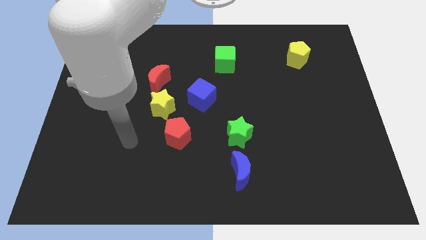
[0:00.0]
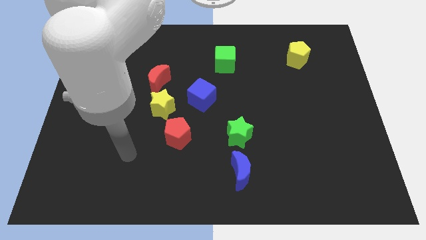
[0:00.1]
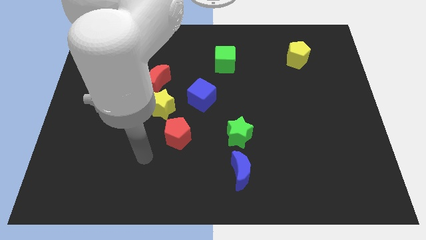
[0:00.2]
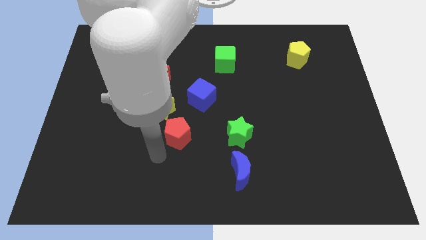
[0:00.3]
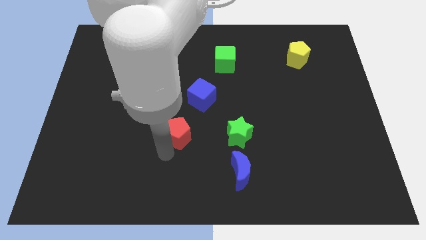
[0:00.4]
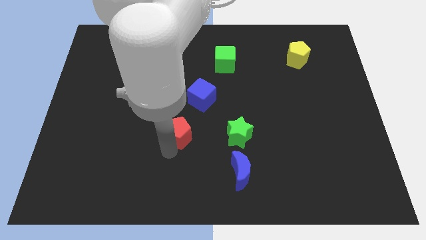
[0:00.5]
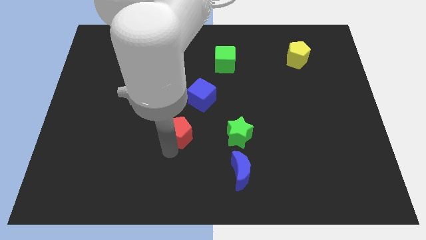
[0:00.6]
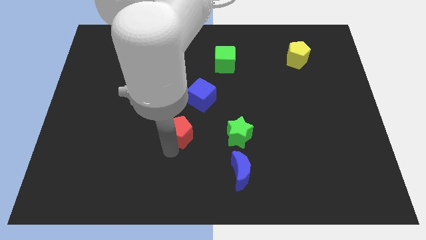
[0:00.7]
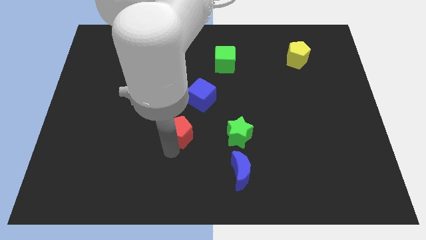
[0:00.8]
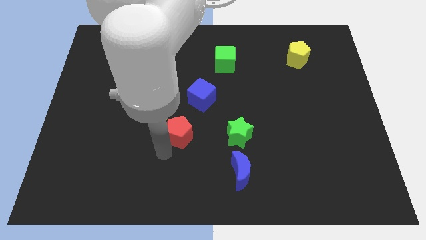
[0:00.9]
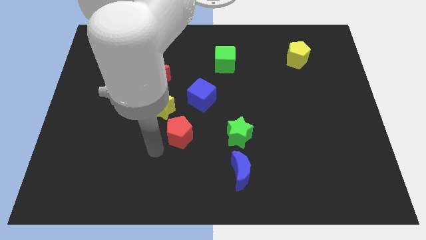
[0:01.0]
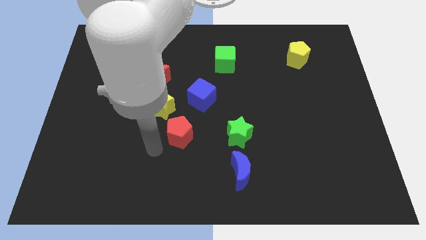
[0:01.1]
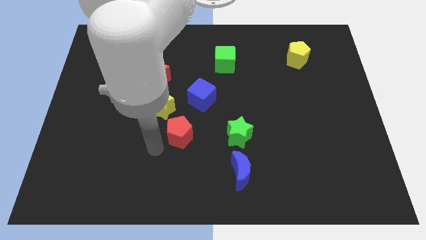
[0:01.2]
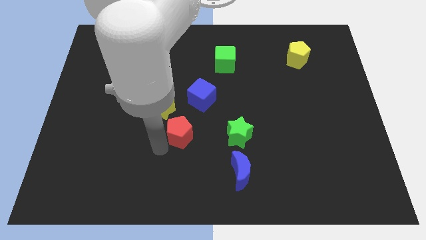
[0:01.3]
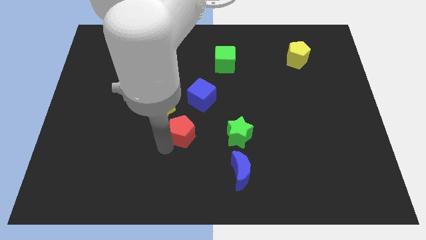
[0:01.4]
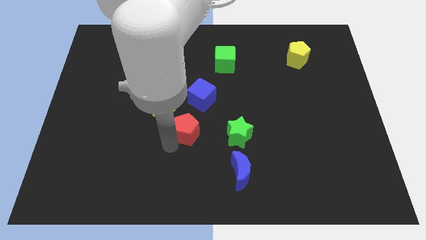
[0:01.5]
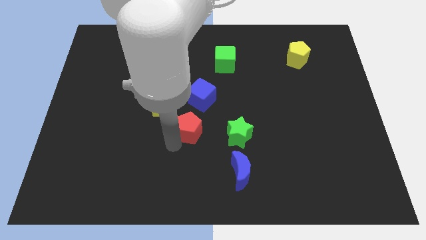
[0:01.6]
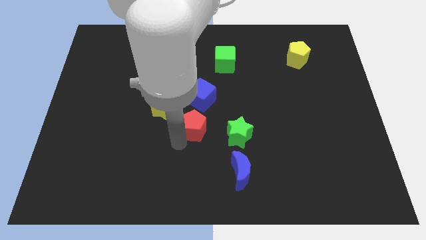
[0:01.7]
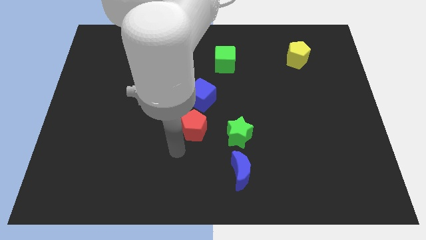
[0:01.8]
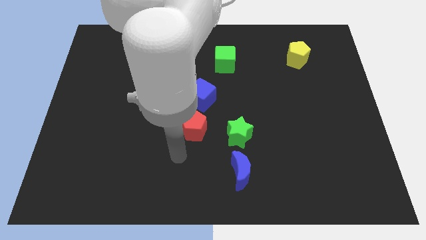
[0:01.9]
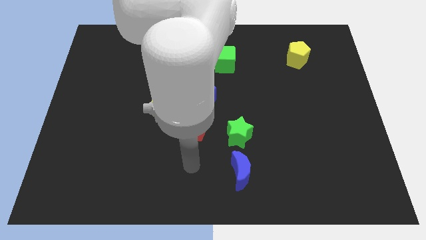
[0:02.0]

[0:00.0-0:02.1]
put the red pentagon below the blue cube

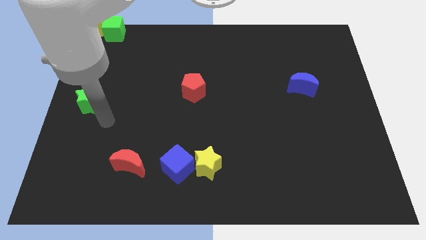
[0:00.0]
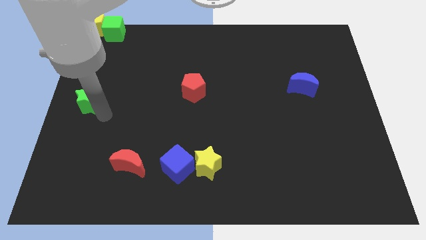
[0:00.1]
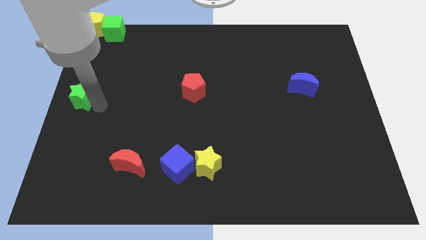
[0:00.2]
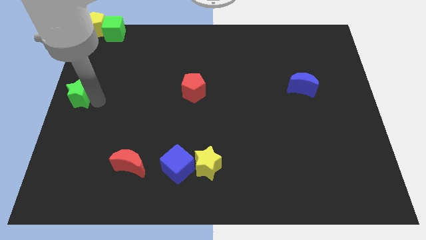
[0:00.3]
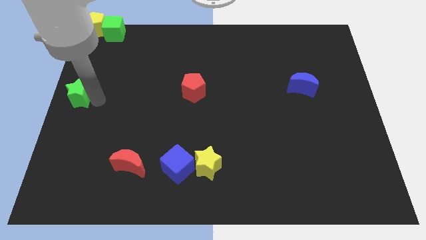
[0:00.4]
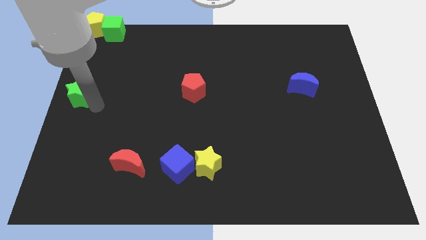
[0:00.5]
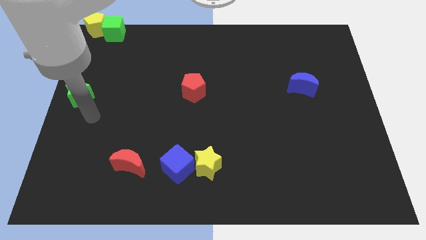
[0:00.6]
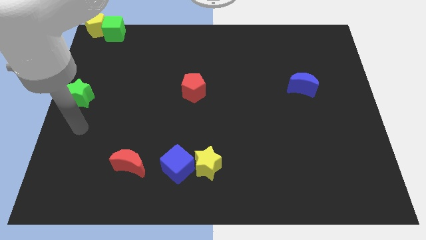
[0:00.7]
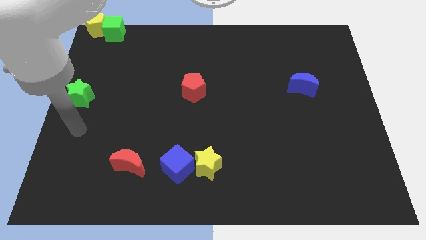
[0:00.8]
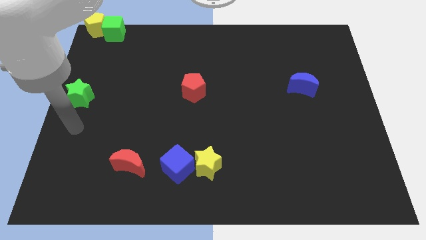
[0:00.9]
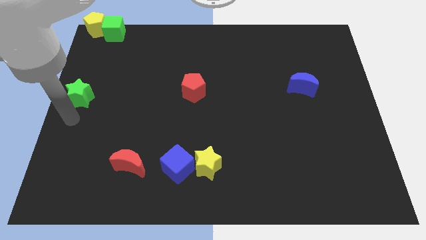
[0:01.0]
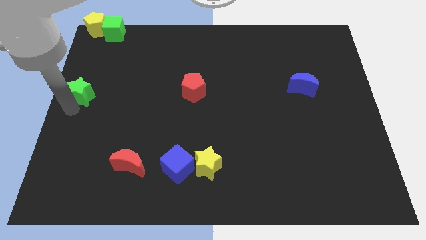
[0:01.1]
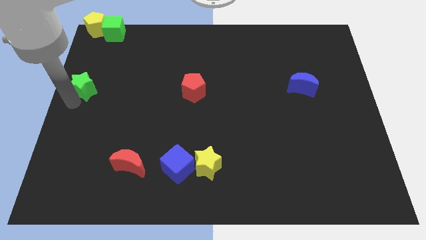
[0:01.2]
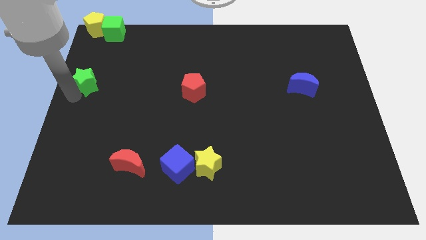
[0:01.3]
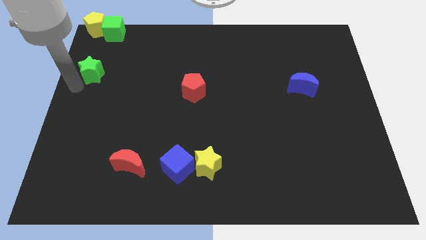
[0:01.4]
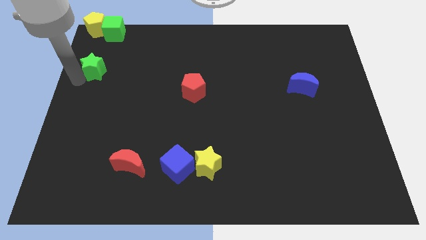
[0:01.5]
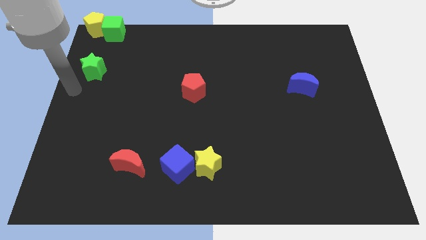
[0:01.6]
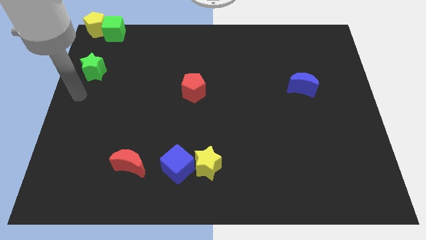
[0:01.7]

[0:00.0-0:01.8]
move the green star below the green cube

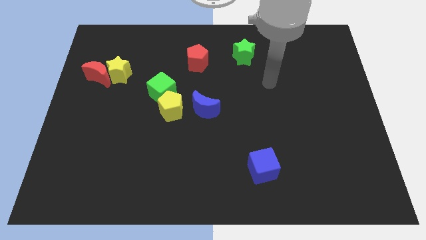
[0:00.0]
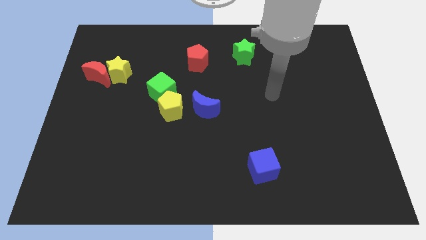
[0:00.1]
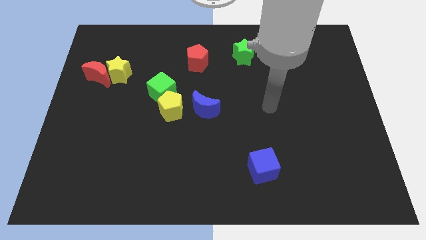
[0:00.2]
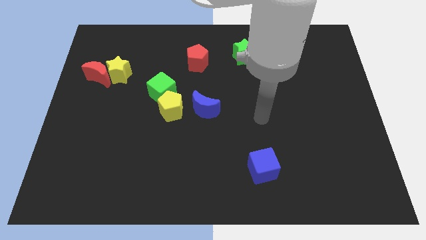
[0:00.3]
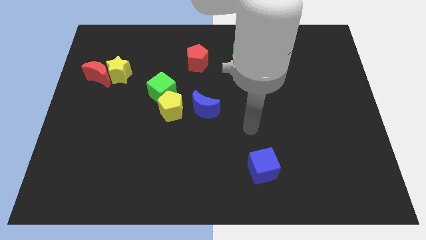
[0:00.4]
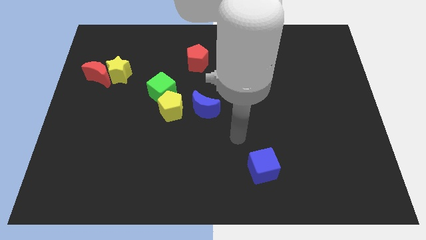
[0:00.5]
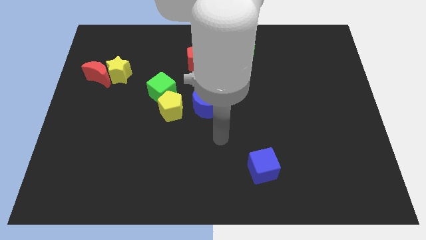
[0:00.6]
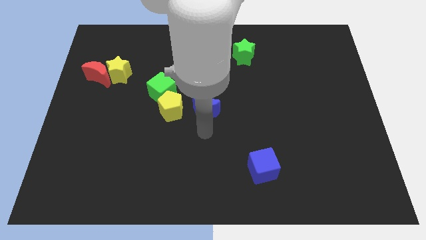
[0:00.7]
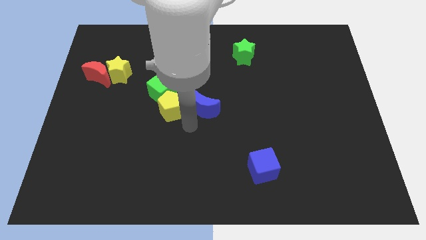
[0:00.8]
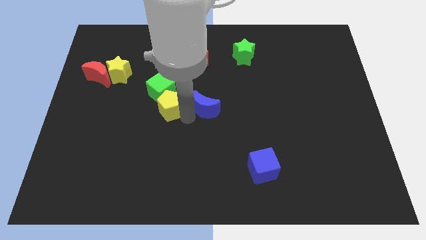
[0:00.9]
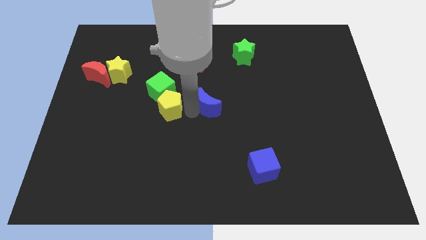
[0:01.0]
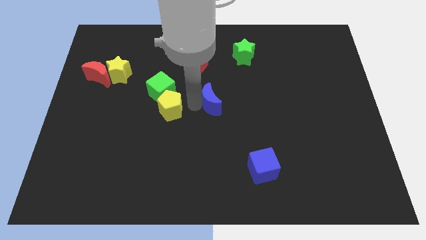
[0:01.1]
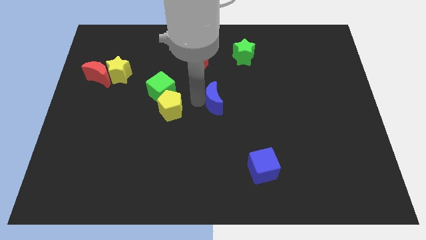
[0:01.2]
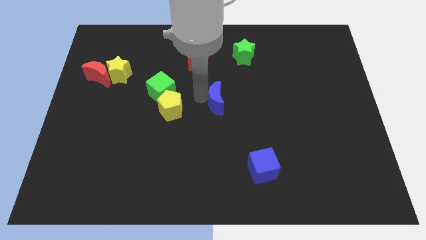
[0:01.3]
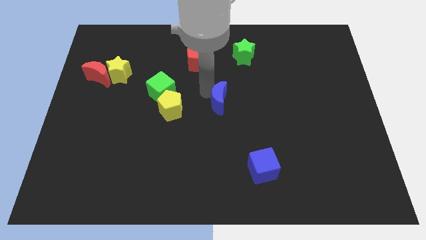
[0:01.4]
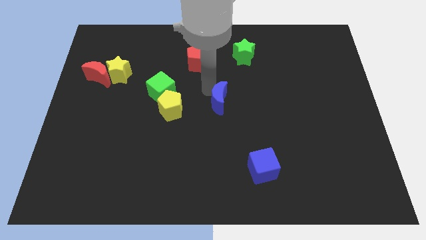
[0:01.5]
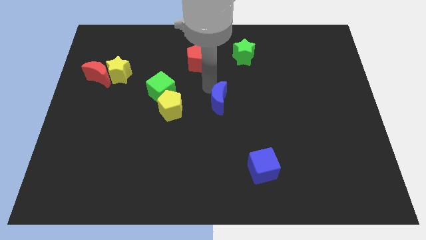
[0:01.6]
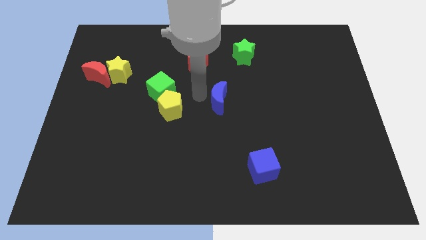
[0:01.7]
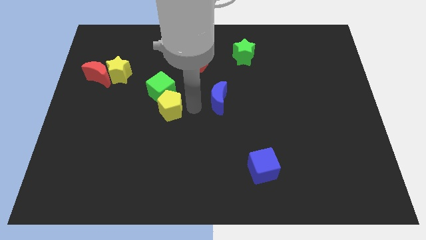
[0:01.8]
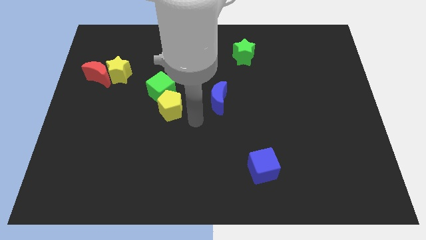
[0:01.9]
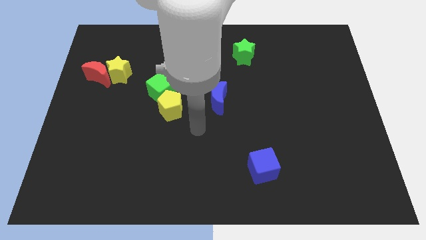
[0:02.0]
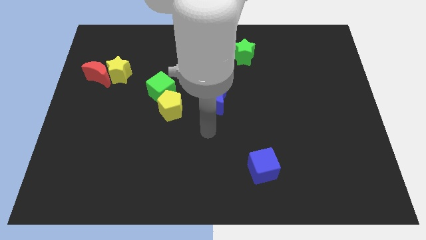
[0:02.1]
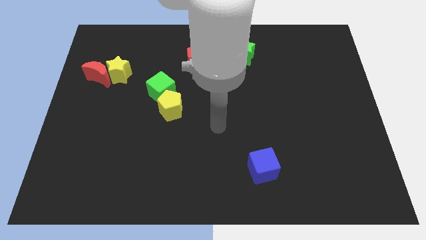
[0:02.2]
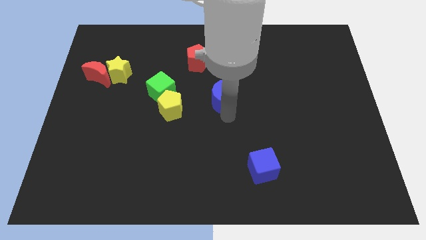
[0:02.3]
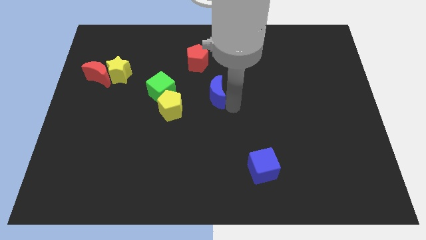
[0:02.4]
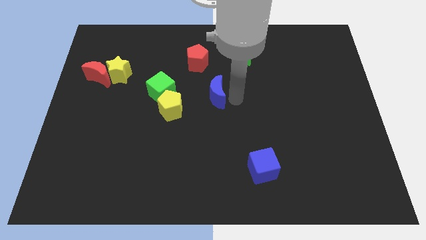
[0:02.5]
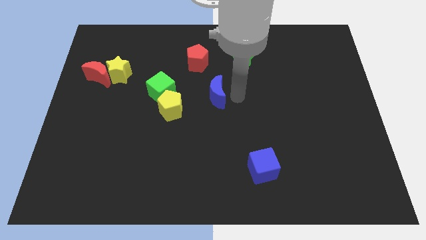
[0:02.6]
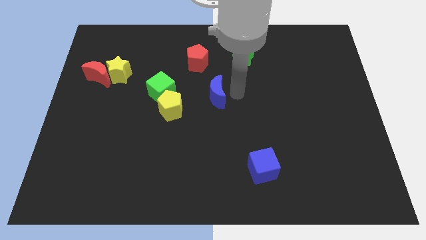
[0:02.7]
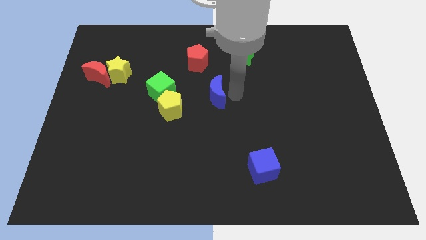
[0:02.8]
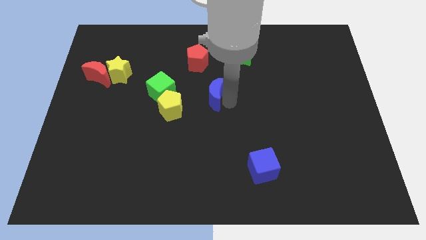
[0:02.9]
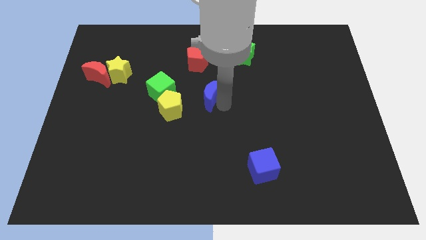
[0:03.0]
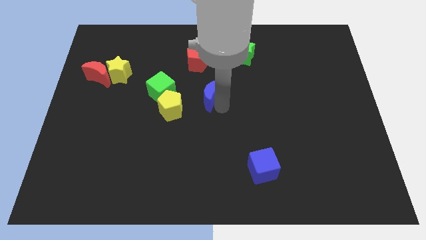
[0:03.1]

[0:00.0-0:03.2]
slightly touch left to the blue moon

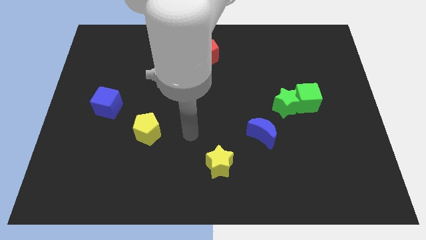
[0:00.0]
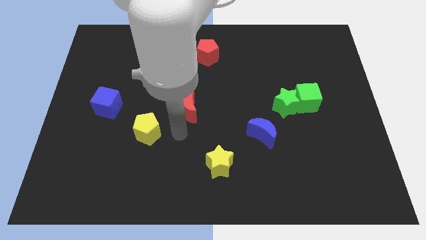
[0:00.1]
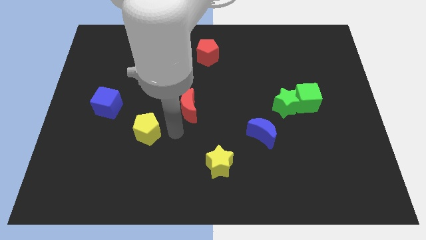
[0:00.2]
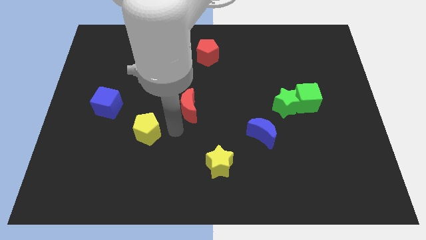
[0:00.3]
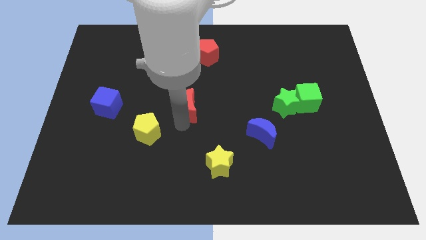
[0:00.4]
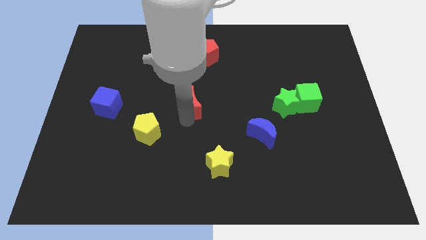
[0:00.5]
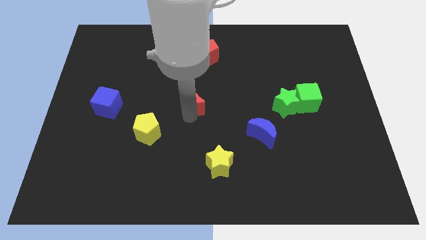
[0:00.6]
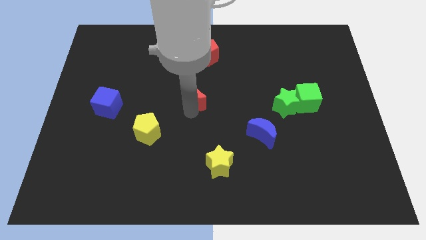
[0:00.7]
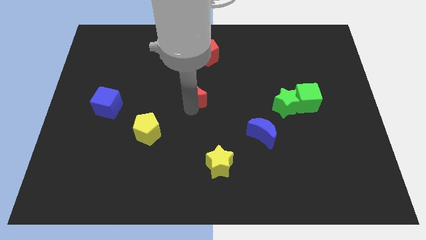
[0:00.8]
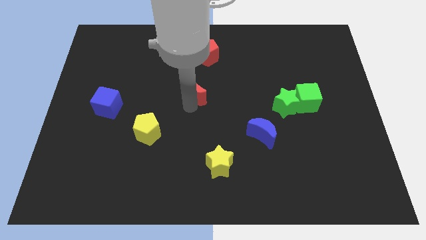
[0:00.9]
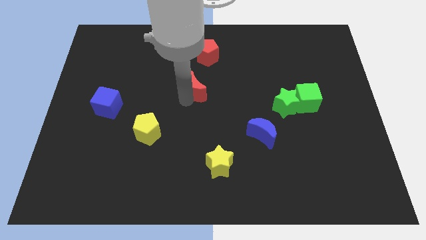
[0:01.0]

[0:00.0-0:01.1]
push the red crescent slightly to the top

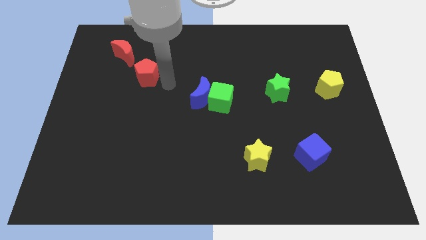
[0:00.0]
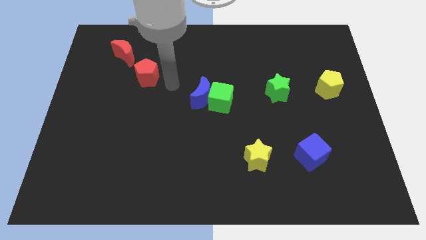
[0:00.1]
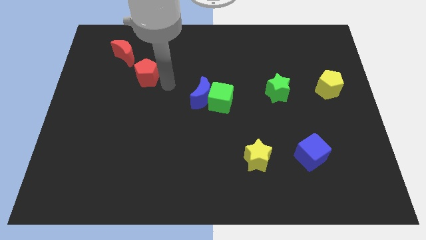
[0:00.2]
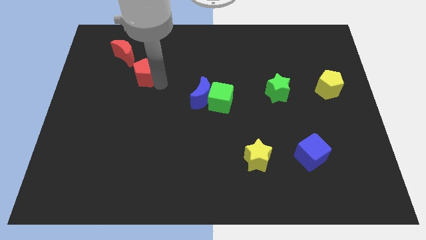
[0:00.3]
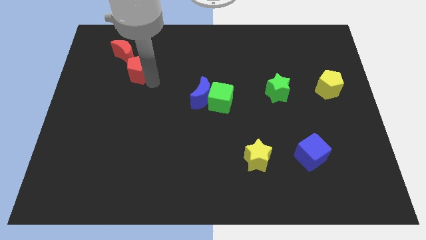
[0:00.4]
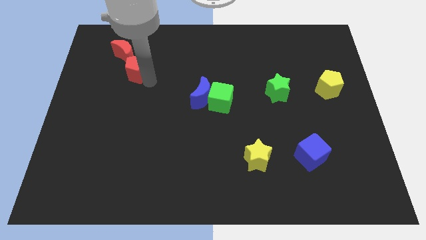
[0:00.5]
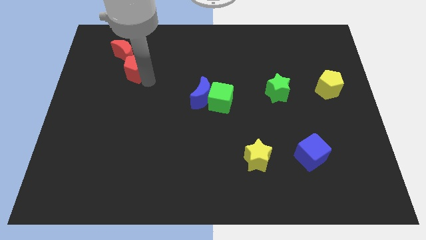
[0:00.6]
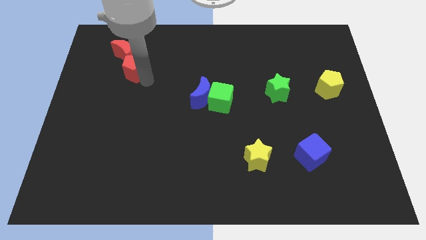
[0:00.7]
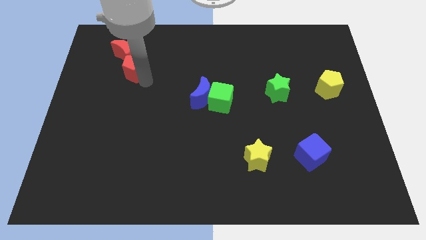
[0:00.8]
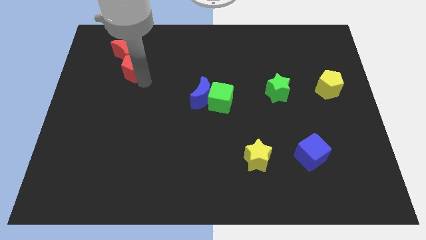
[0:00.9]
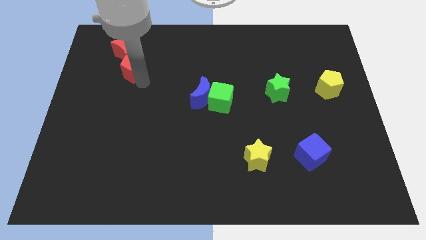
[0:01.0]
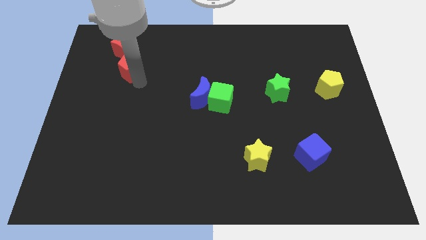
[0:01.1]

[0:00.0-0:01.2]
push the red pentagon into the red crescent
